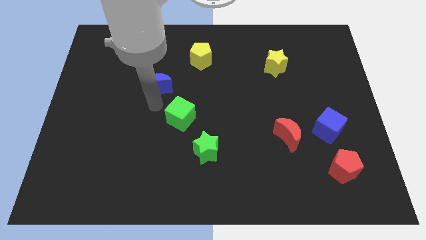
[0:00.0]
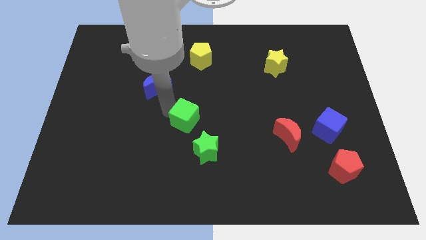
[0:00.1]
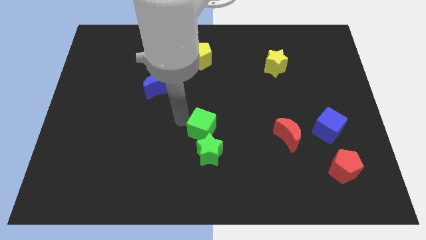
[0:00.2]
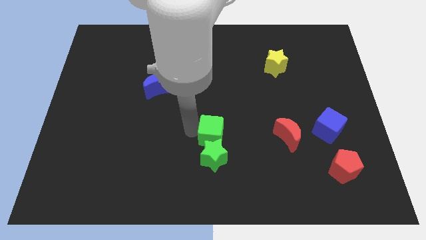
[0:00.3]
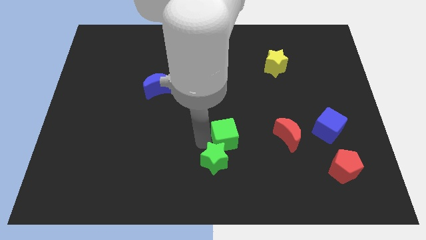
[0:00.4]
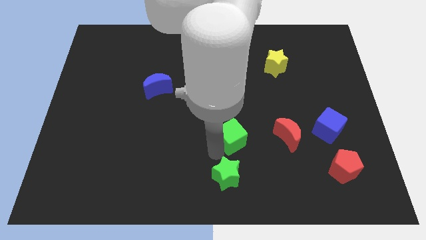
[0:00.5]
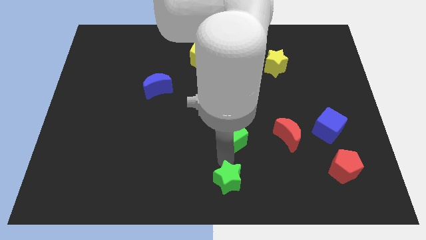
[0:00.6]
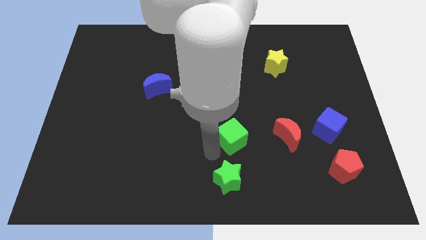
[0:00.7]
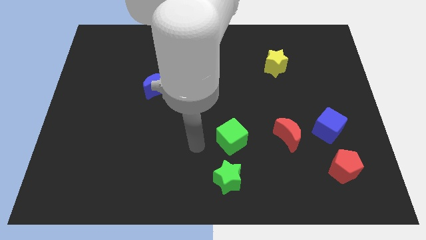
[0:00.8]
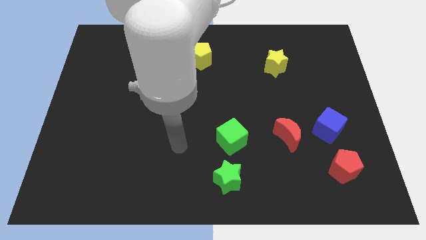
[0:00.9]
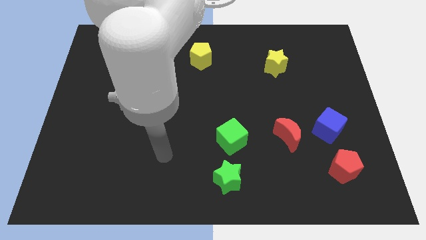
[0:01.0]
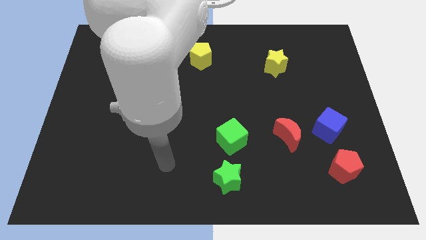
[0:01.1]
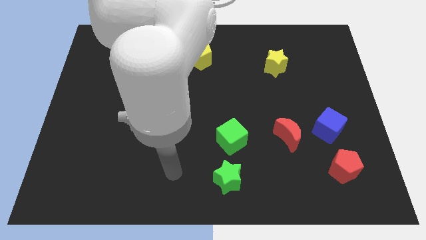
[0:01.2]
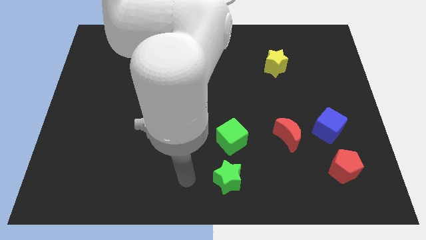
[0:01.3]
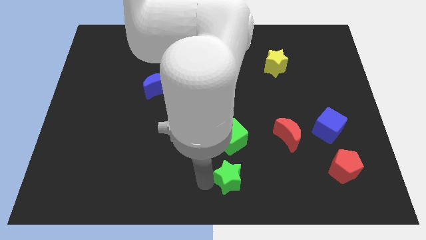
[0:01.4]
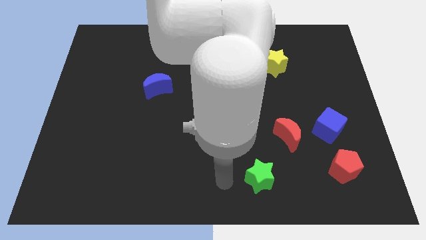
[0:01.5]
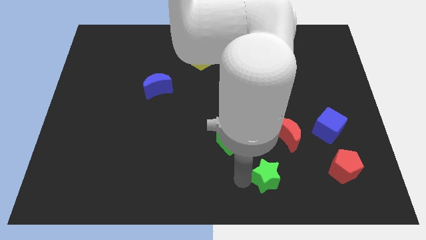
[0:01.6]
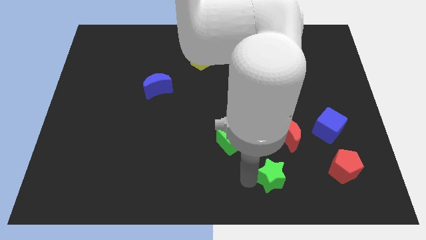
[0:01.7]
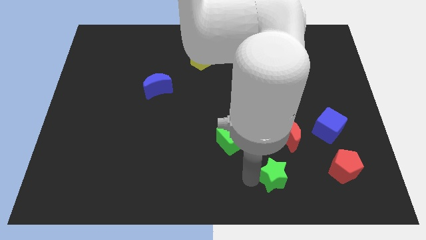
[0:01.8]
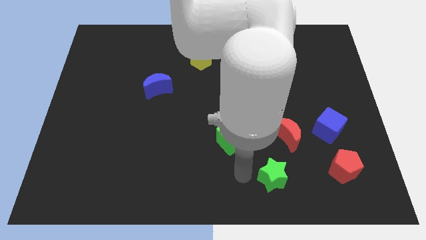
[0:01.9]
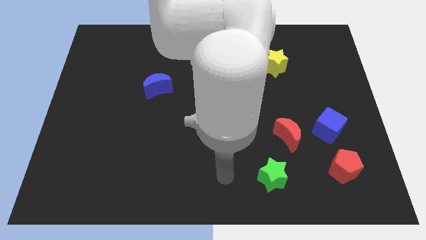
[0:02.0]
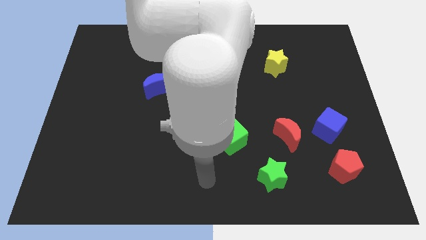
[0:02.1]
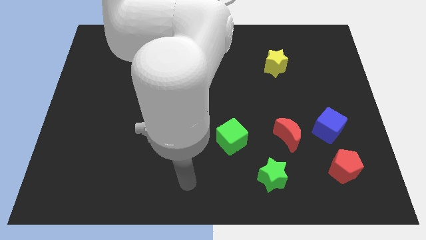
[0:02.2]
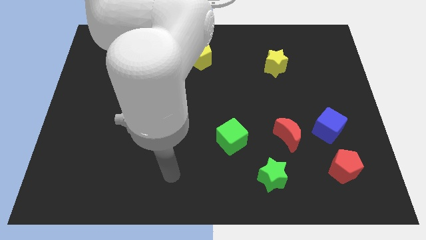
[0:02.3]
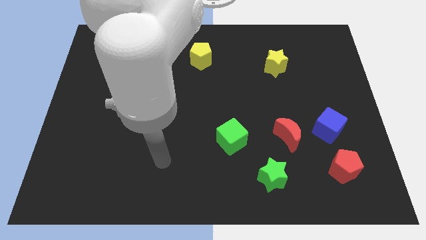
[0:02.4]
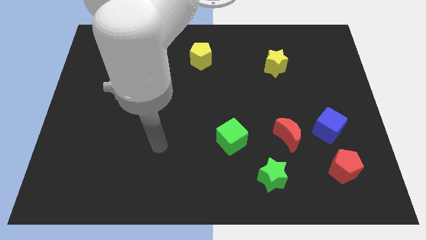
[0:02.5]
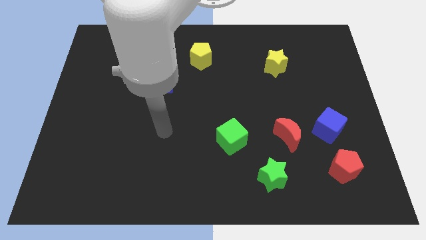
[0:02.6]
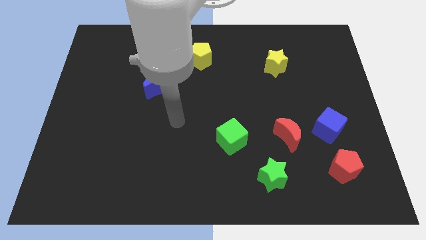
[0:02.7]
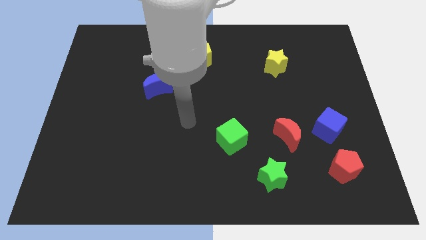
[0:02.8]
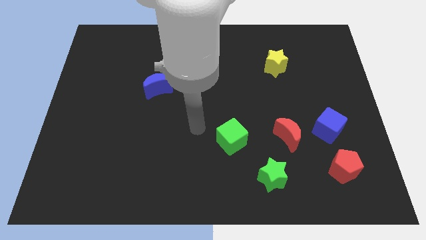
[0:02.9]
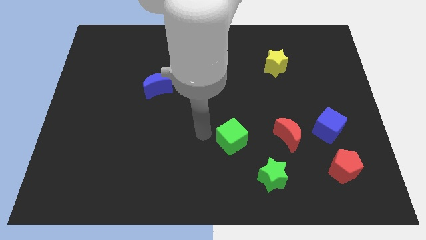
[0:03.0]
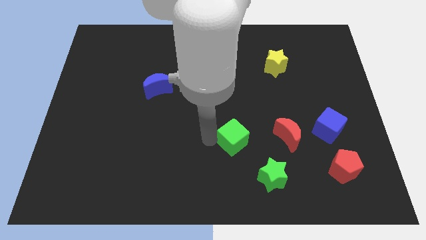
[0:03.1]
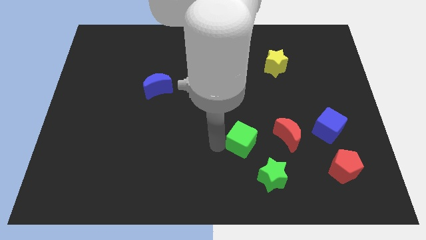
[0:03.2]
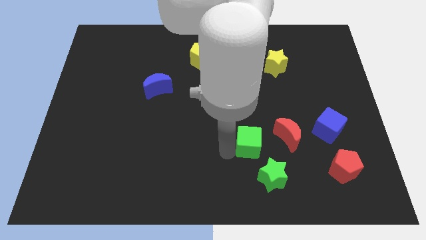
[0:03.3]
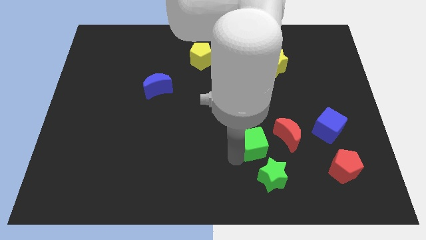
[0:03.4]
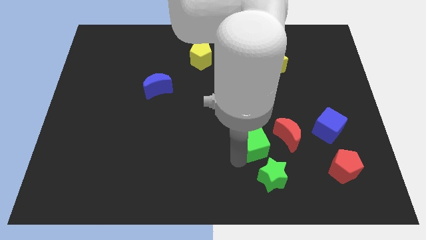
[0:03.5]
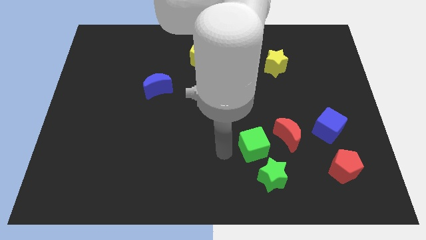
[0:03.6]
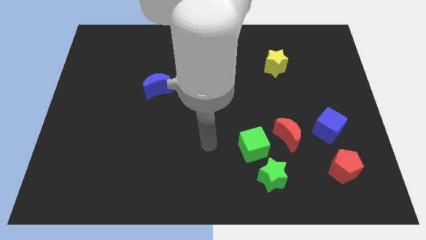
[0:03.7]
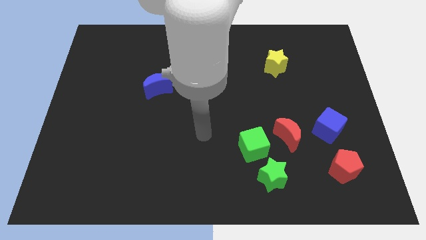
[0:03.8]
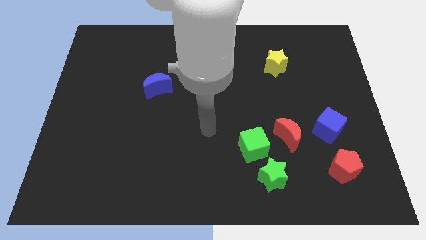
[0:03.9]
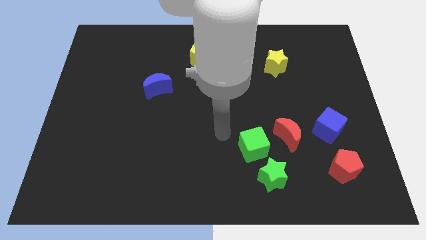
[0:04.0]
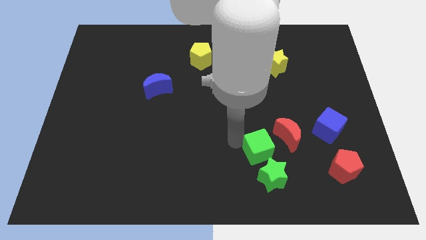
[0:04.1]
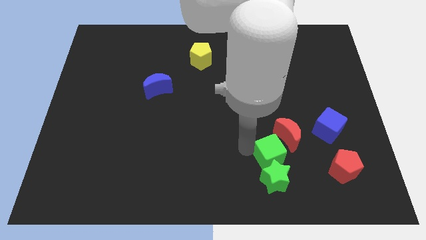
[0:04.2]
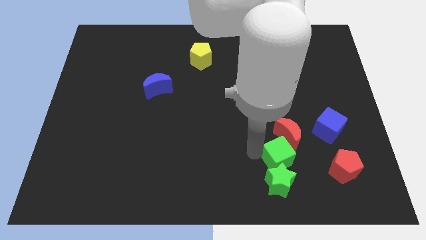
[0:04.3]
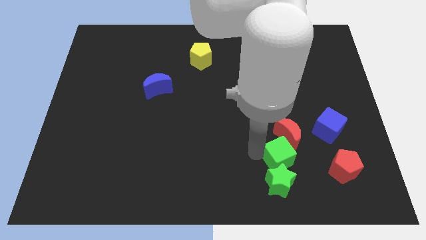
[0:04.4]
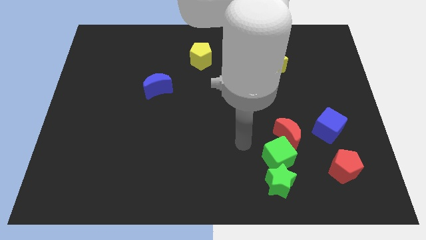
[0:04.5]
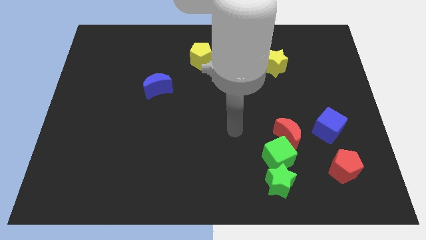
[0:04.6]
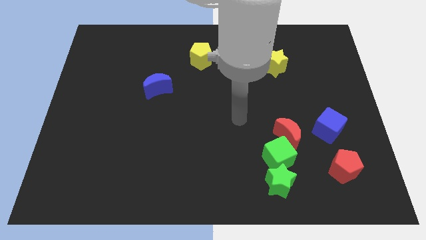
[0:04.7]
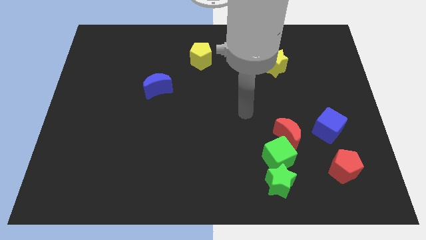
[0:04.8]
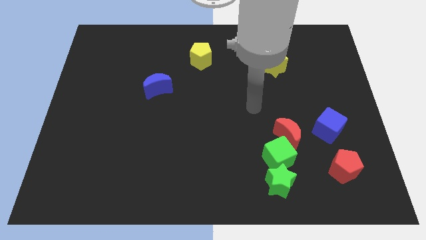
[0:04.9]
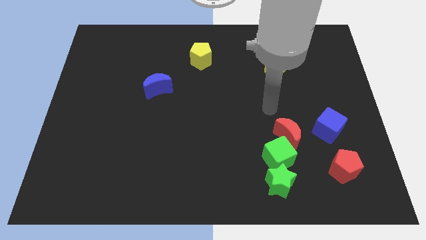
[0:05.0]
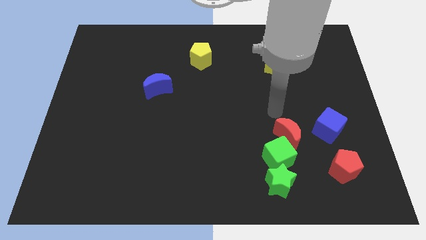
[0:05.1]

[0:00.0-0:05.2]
place the green blocks to the left of the red pentagon

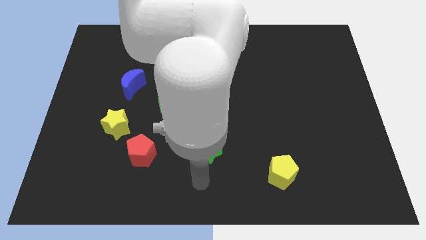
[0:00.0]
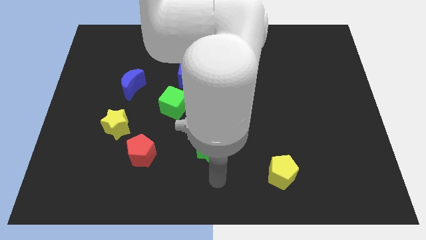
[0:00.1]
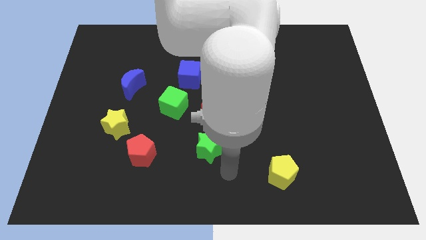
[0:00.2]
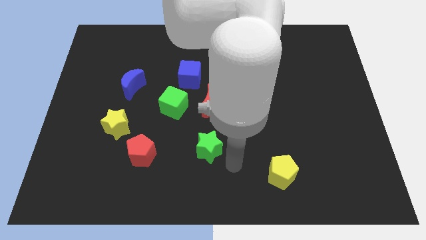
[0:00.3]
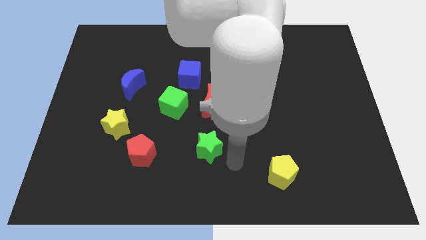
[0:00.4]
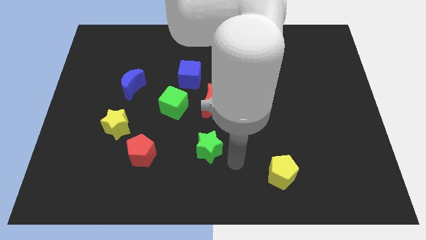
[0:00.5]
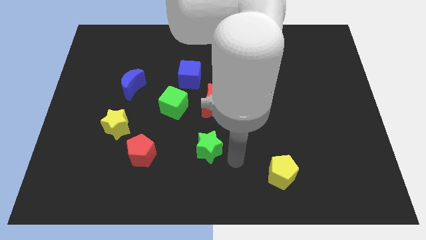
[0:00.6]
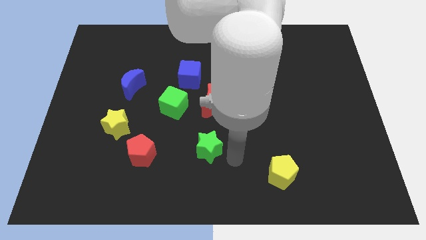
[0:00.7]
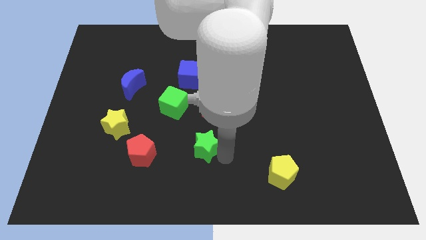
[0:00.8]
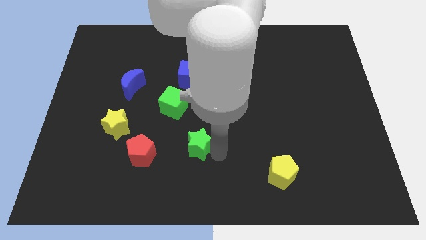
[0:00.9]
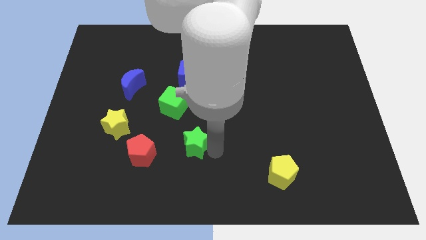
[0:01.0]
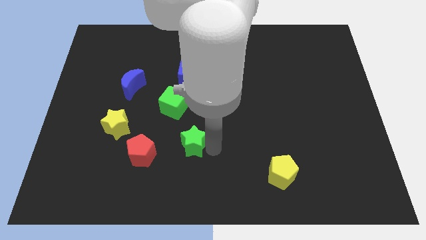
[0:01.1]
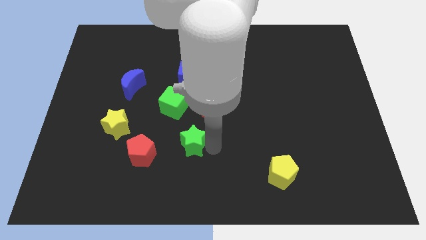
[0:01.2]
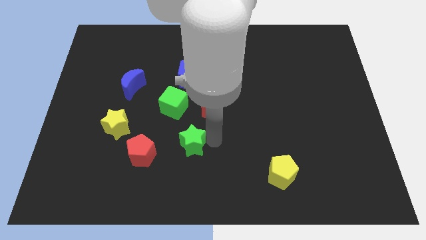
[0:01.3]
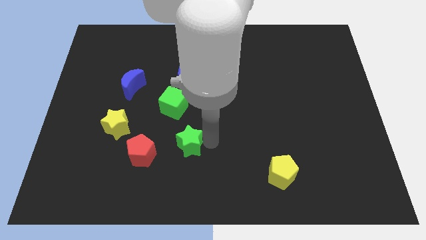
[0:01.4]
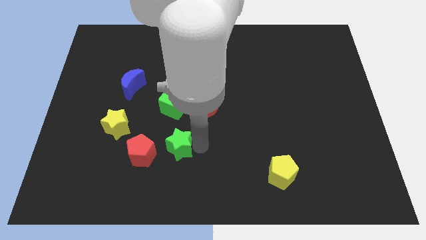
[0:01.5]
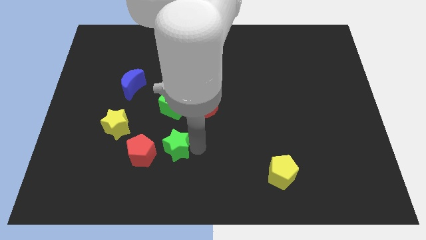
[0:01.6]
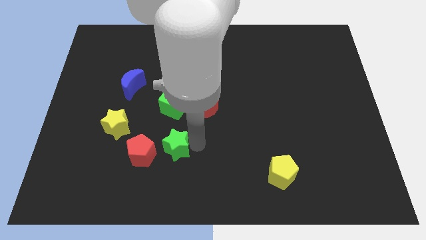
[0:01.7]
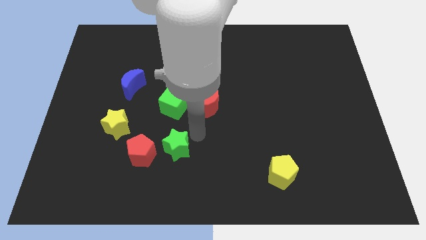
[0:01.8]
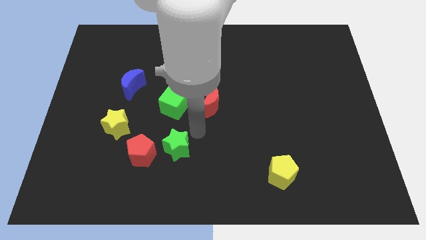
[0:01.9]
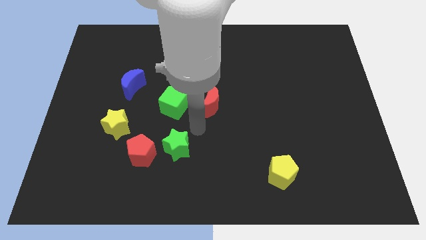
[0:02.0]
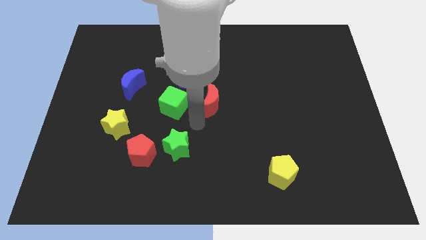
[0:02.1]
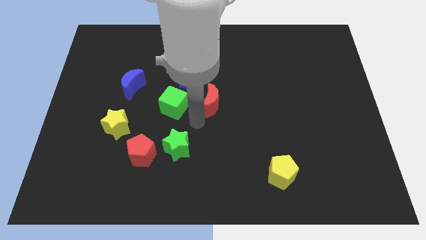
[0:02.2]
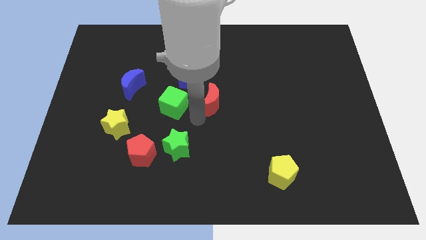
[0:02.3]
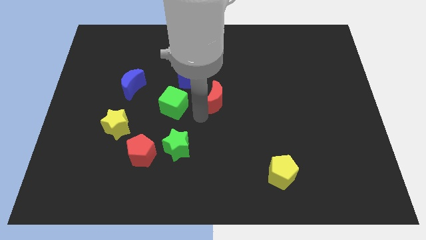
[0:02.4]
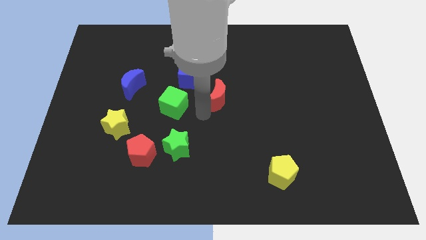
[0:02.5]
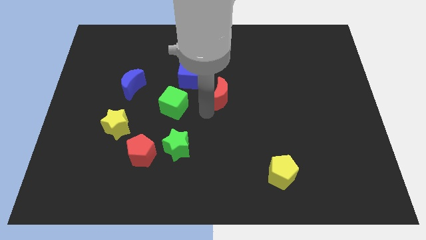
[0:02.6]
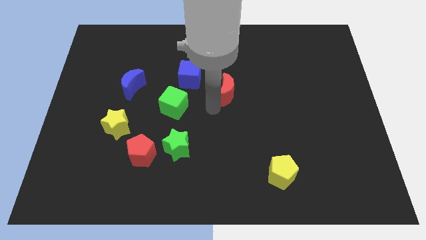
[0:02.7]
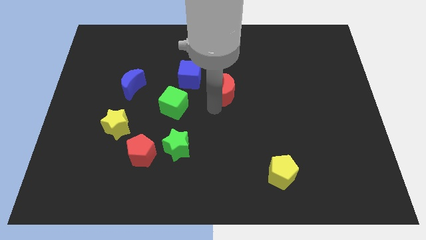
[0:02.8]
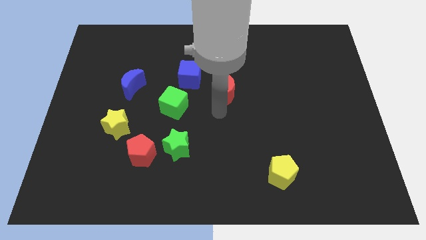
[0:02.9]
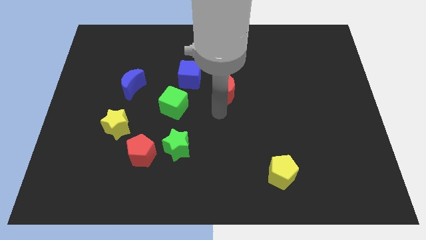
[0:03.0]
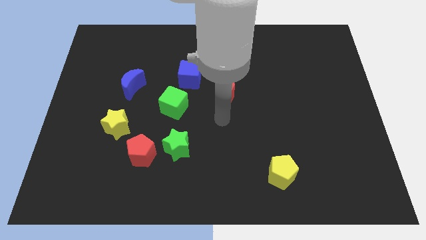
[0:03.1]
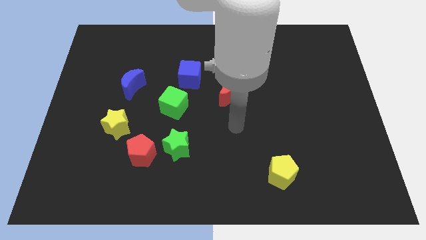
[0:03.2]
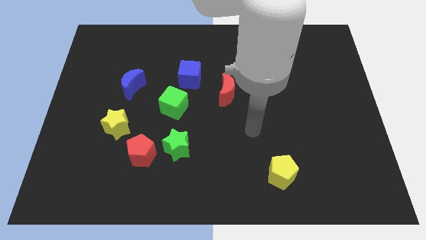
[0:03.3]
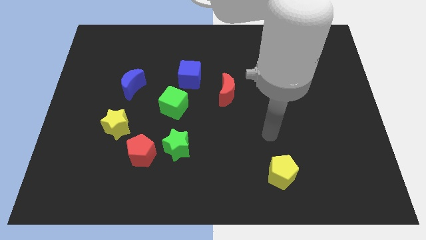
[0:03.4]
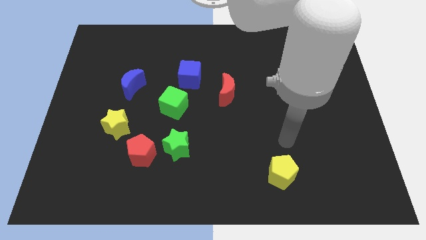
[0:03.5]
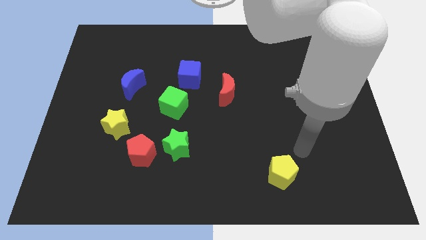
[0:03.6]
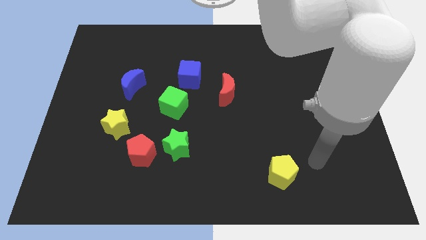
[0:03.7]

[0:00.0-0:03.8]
move the green star below the green cube
